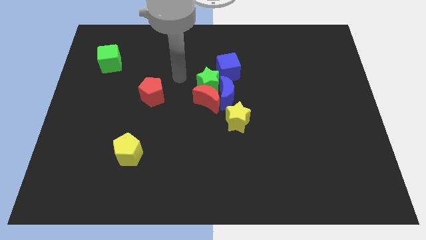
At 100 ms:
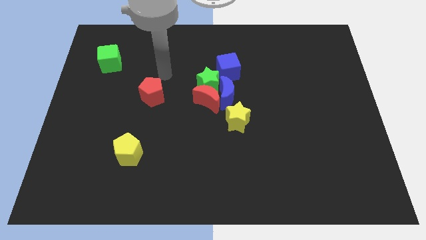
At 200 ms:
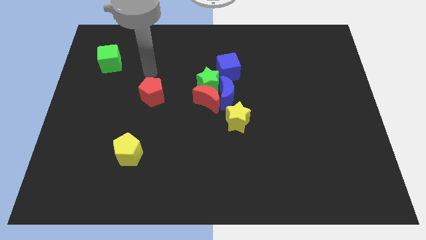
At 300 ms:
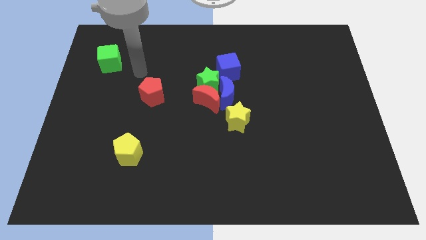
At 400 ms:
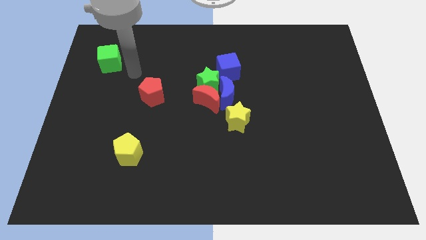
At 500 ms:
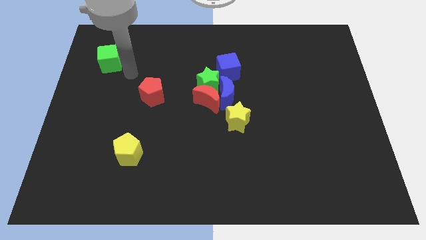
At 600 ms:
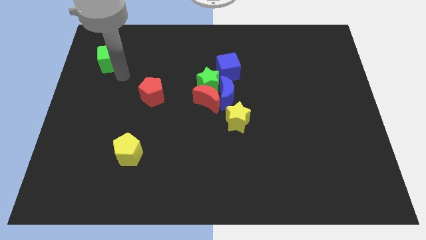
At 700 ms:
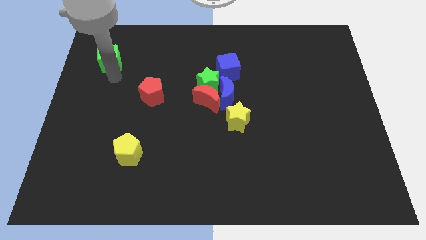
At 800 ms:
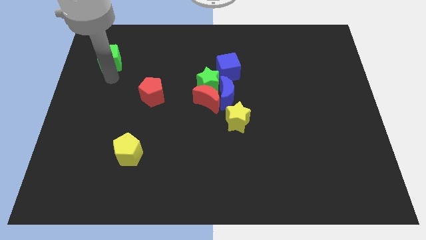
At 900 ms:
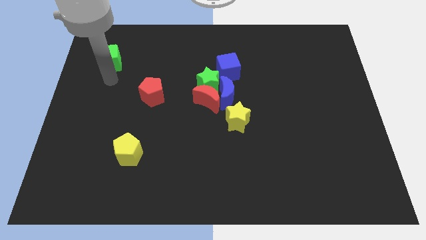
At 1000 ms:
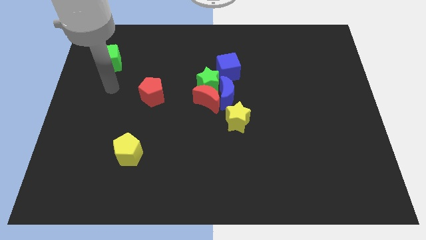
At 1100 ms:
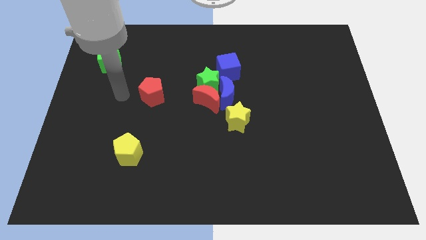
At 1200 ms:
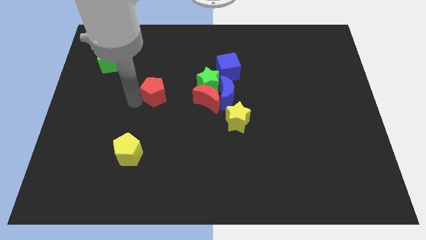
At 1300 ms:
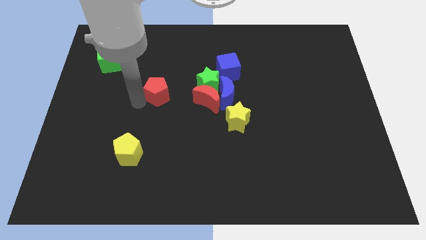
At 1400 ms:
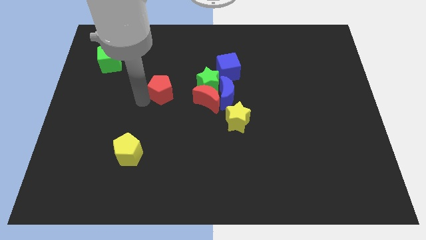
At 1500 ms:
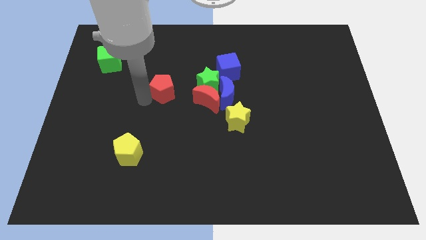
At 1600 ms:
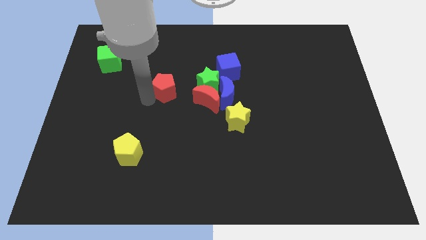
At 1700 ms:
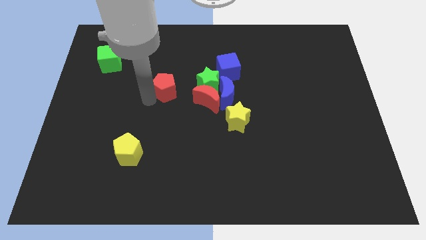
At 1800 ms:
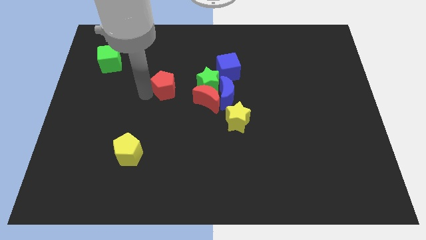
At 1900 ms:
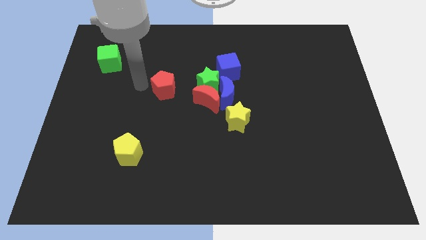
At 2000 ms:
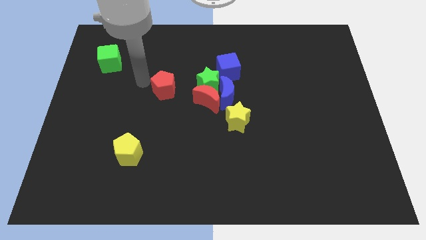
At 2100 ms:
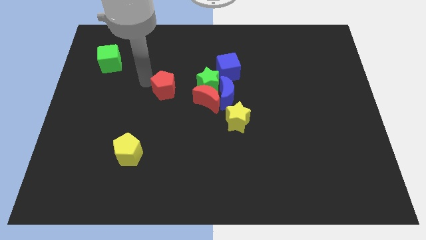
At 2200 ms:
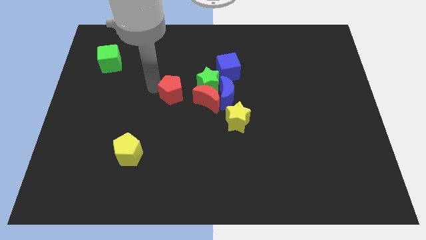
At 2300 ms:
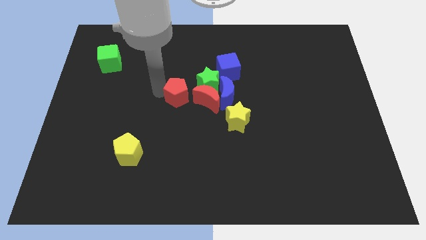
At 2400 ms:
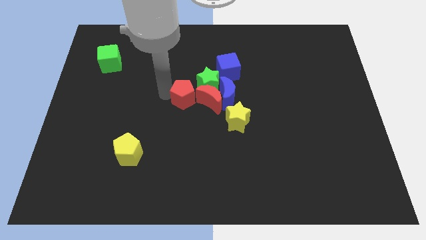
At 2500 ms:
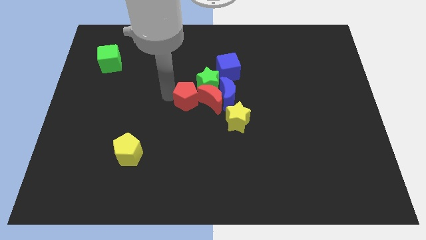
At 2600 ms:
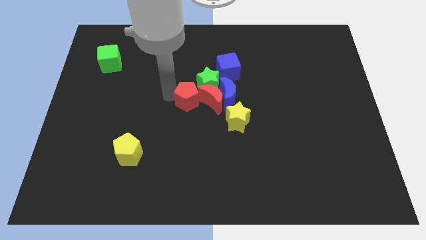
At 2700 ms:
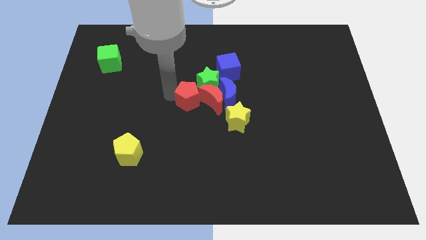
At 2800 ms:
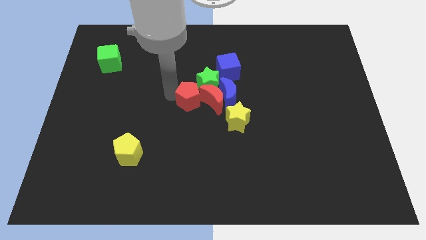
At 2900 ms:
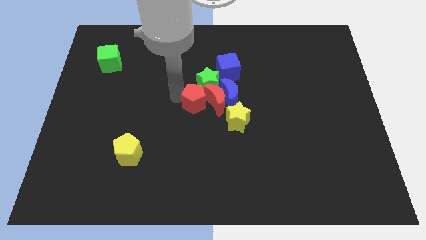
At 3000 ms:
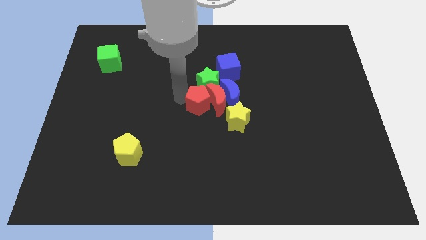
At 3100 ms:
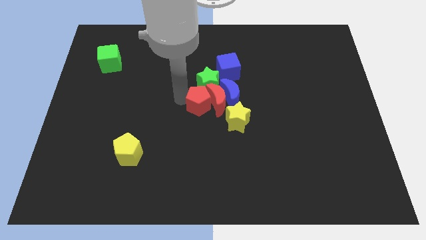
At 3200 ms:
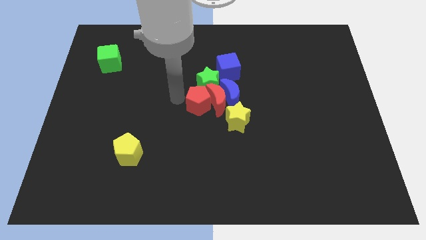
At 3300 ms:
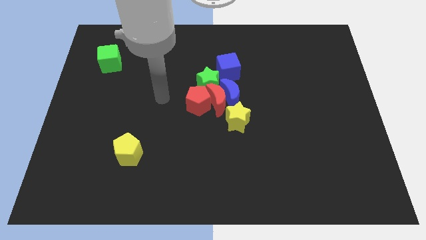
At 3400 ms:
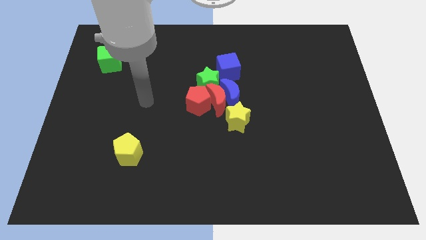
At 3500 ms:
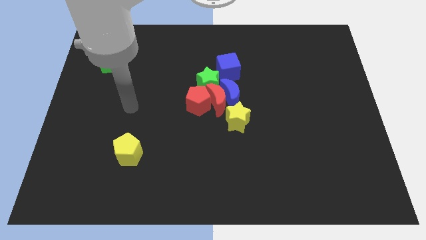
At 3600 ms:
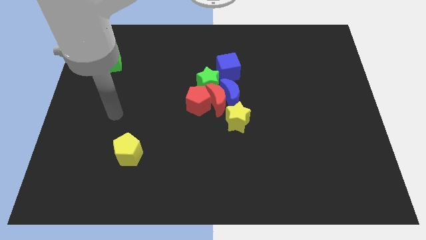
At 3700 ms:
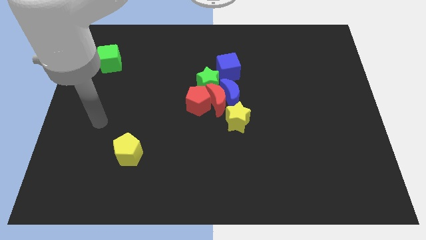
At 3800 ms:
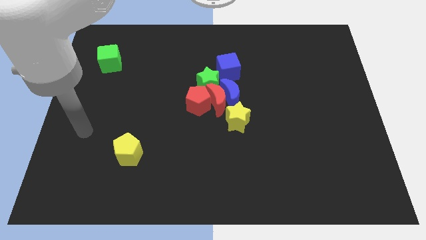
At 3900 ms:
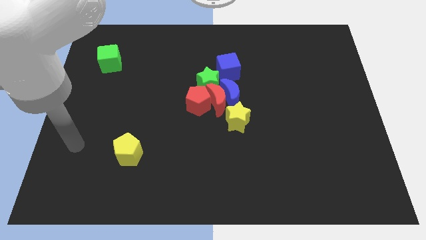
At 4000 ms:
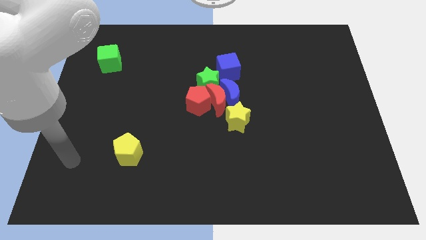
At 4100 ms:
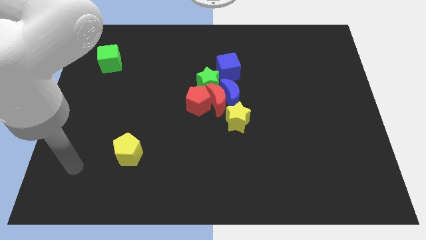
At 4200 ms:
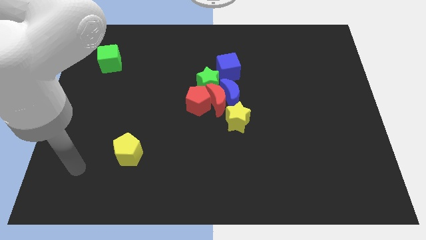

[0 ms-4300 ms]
push the red pentagon to the left of the red crescent

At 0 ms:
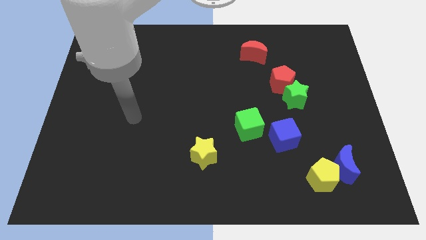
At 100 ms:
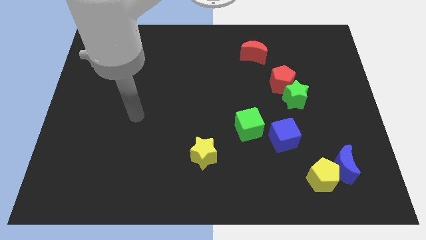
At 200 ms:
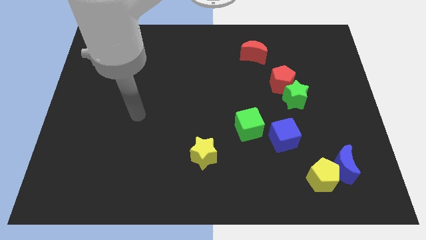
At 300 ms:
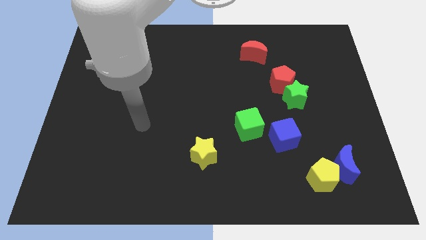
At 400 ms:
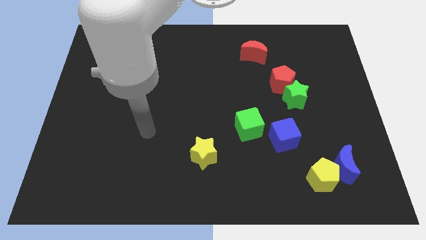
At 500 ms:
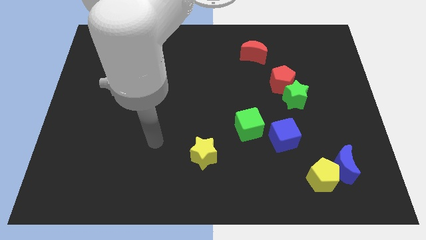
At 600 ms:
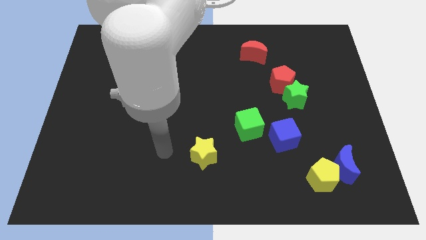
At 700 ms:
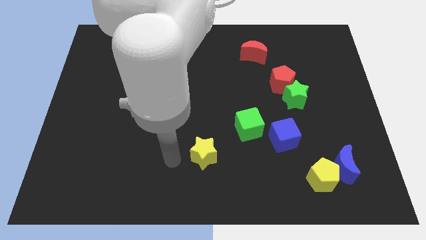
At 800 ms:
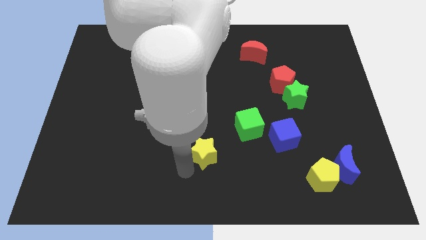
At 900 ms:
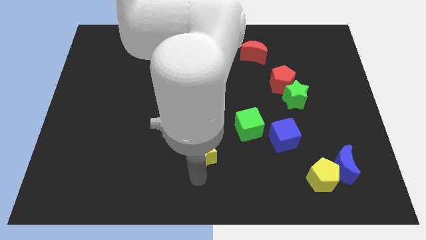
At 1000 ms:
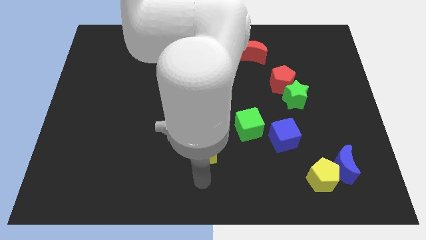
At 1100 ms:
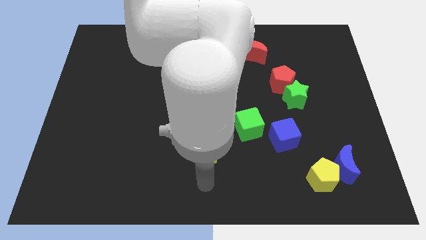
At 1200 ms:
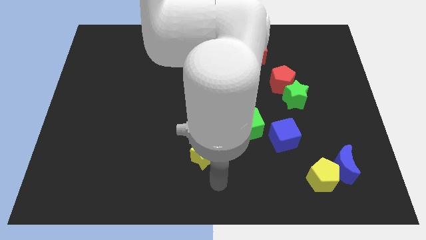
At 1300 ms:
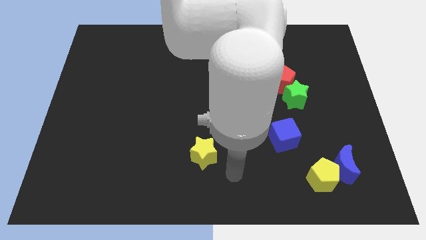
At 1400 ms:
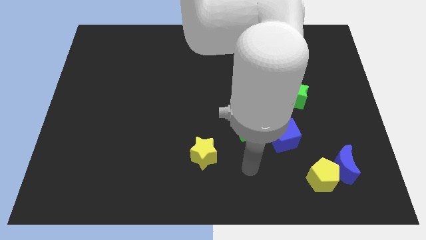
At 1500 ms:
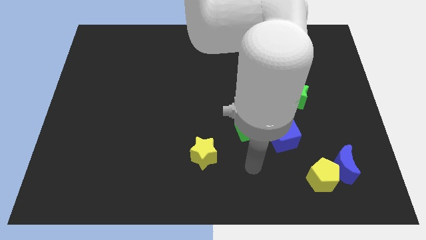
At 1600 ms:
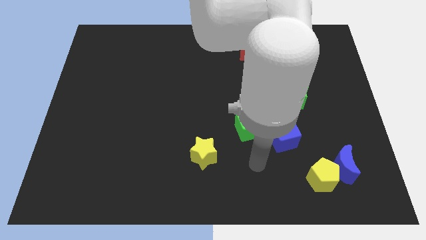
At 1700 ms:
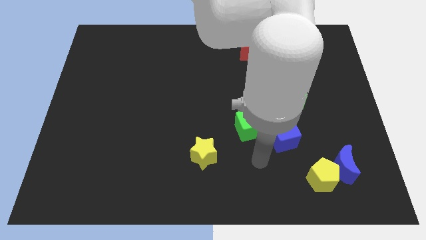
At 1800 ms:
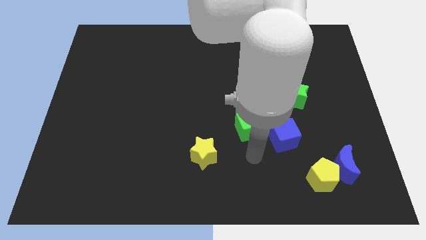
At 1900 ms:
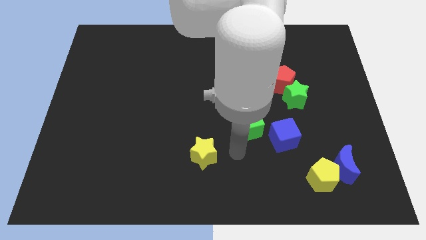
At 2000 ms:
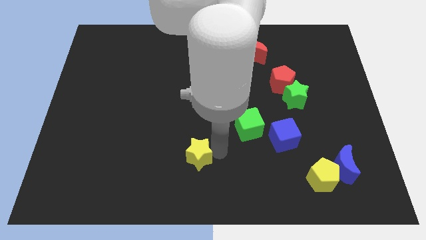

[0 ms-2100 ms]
place the arm right to the yellow star

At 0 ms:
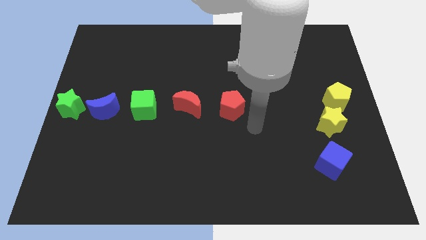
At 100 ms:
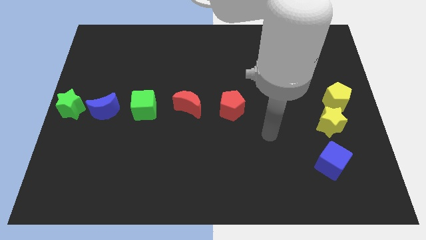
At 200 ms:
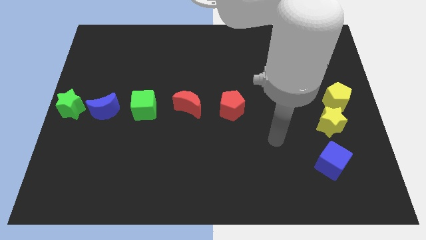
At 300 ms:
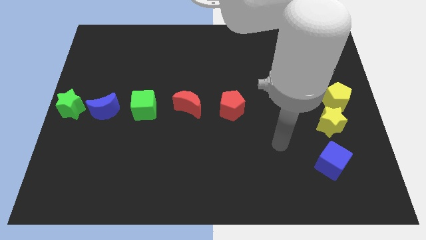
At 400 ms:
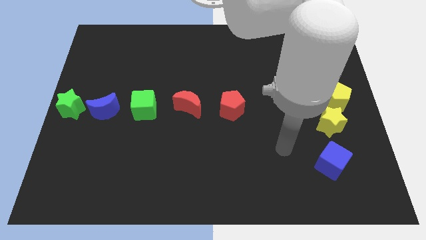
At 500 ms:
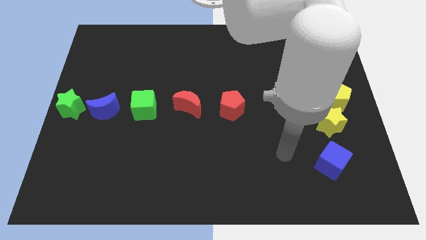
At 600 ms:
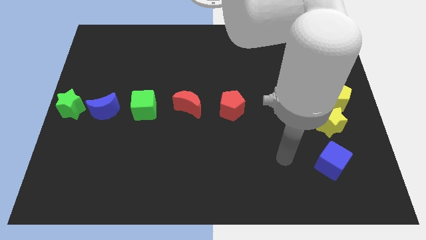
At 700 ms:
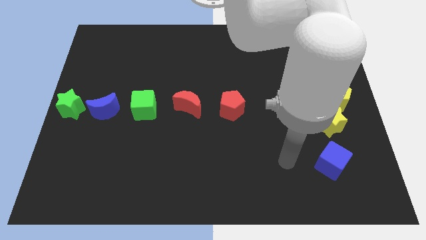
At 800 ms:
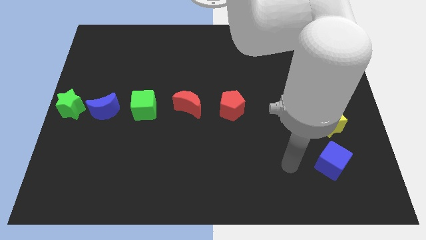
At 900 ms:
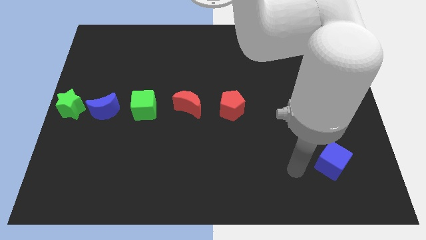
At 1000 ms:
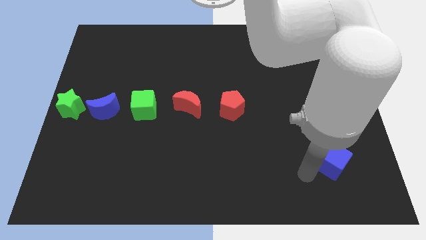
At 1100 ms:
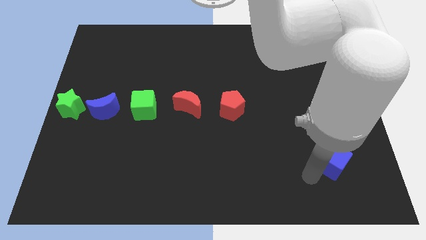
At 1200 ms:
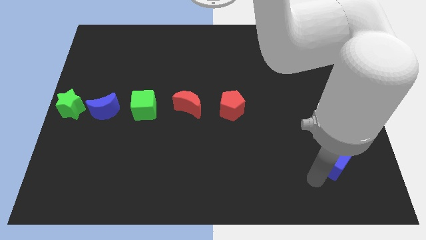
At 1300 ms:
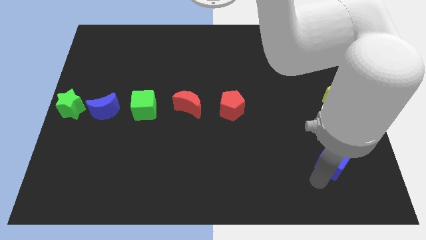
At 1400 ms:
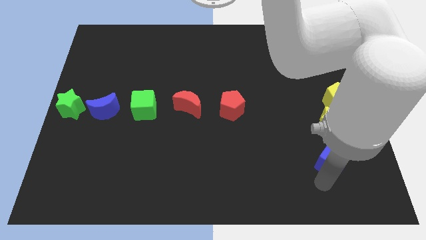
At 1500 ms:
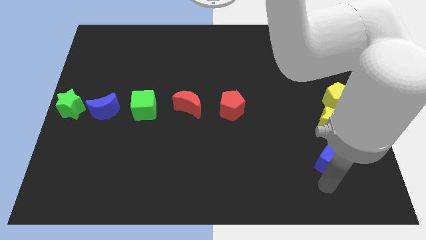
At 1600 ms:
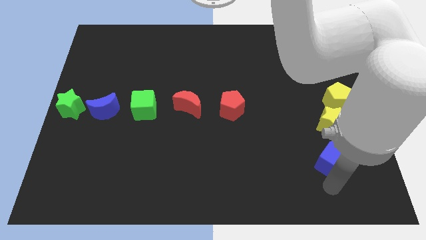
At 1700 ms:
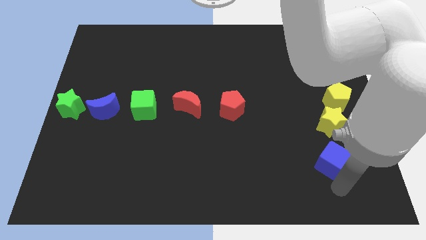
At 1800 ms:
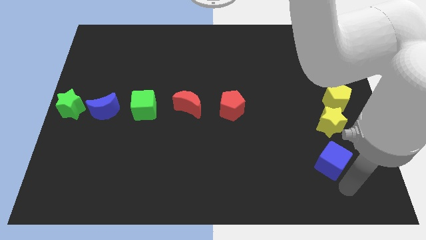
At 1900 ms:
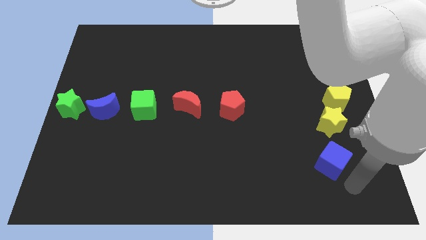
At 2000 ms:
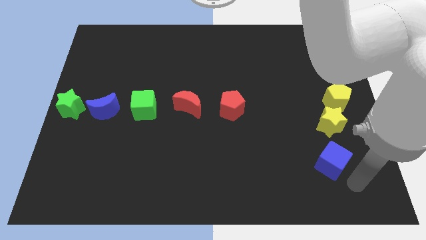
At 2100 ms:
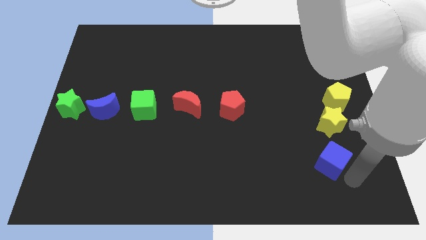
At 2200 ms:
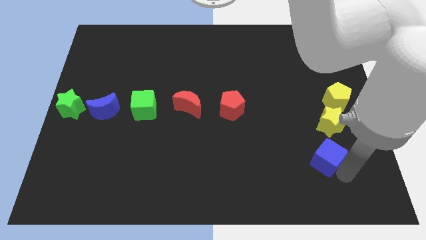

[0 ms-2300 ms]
move arm to the bottom right of the board

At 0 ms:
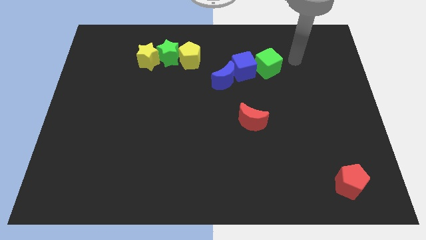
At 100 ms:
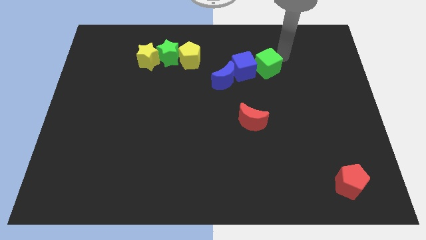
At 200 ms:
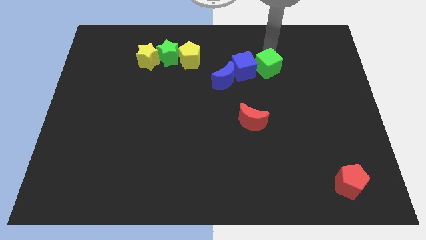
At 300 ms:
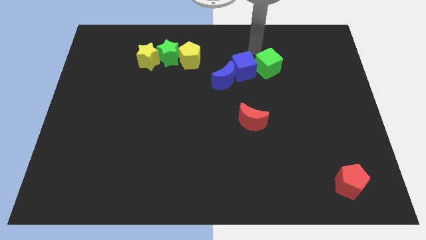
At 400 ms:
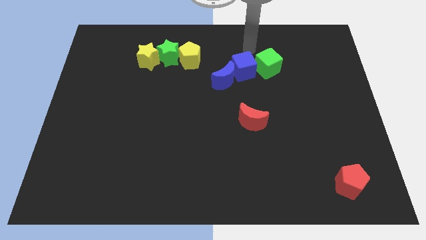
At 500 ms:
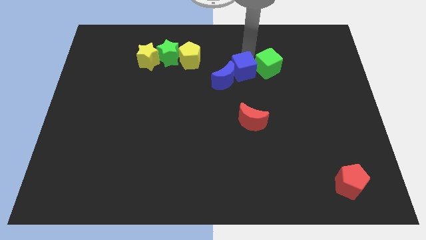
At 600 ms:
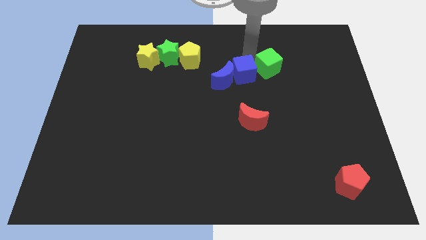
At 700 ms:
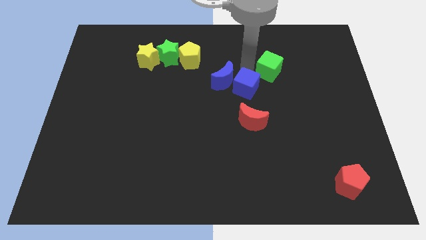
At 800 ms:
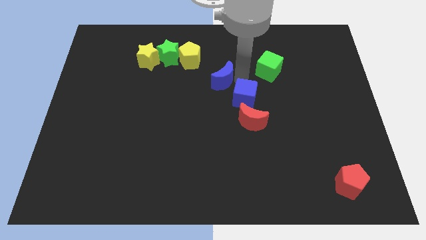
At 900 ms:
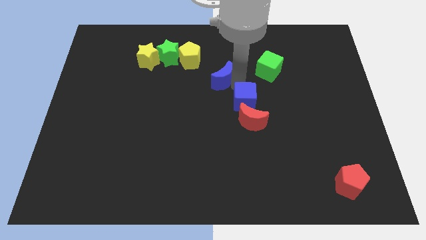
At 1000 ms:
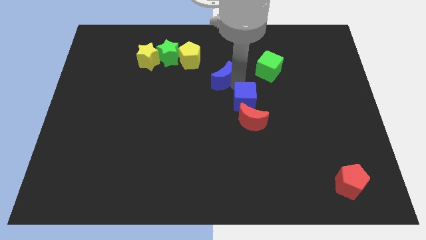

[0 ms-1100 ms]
push the blue cube close to the red crescent
